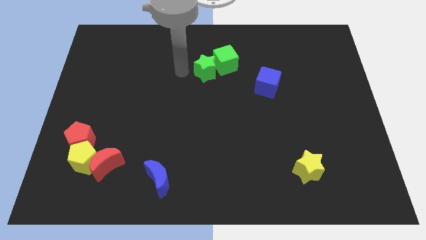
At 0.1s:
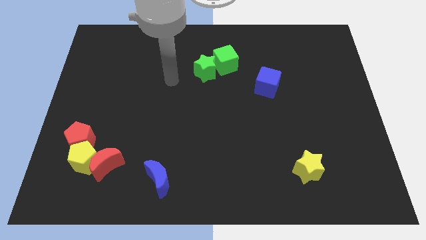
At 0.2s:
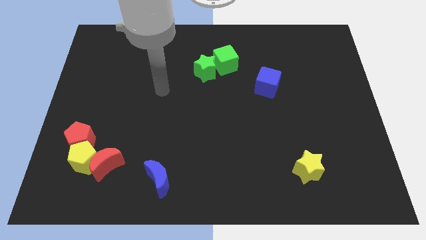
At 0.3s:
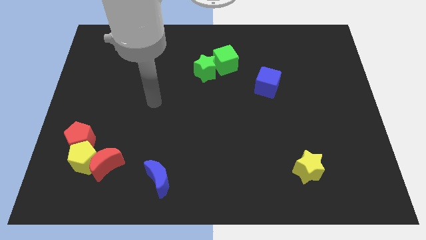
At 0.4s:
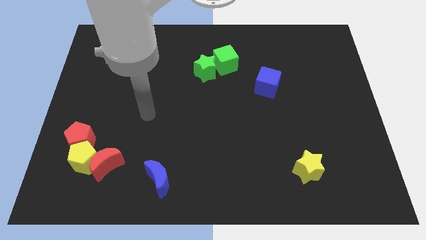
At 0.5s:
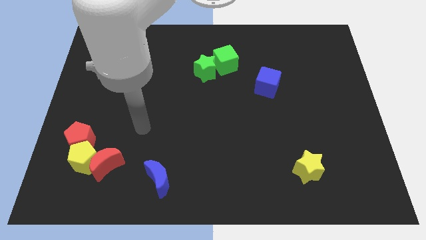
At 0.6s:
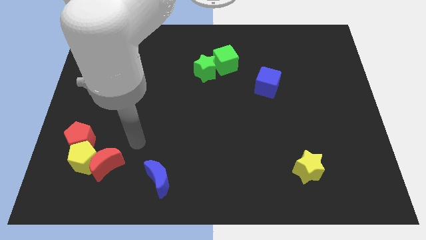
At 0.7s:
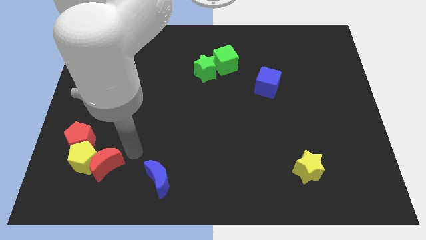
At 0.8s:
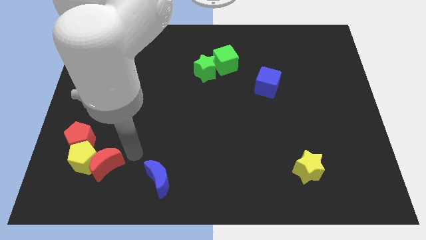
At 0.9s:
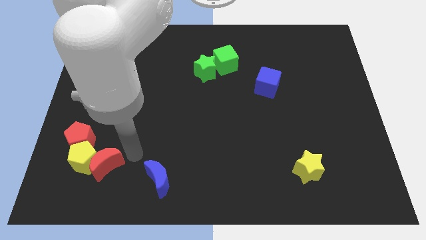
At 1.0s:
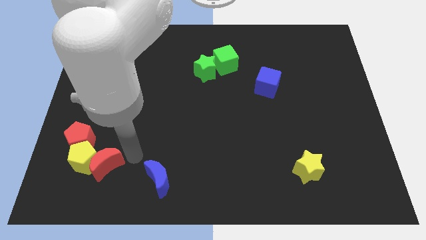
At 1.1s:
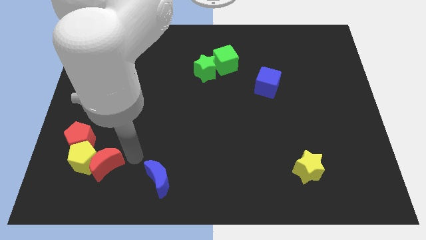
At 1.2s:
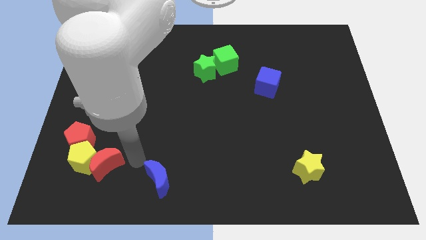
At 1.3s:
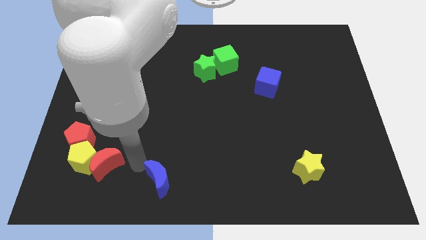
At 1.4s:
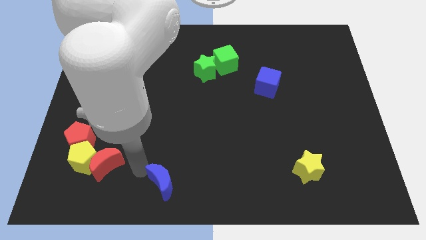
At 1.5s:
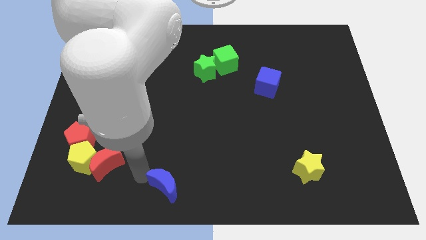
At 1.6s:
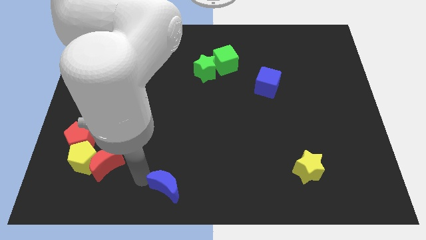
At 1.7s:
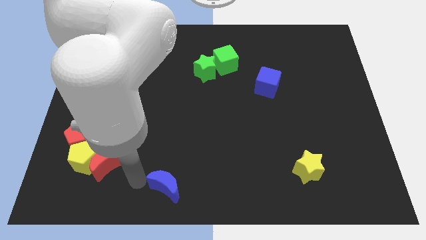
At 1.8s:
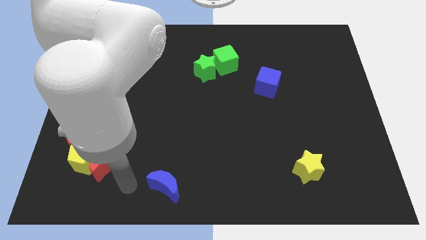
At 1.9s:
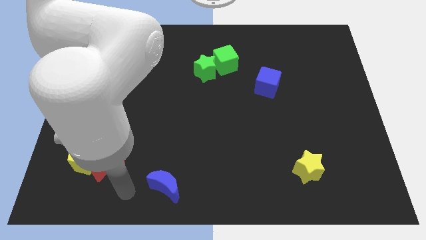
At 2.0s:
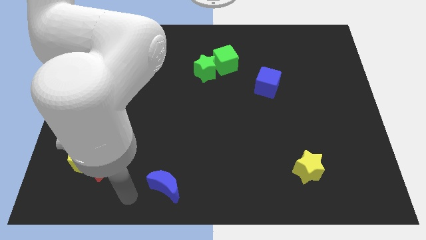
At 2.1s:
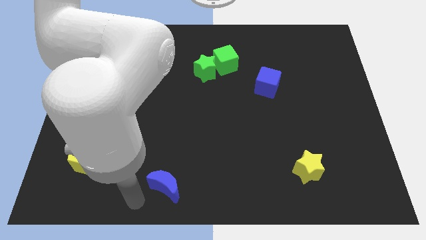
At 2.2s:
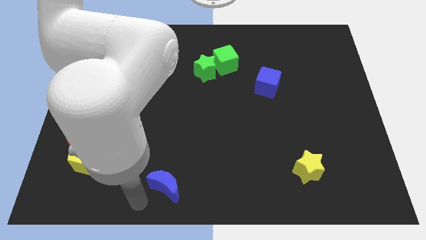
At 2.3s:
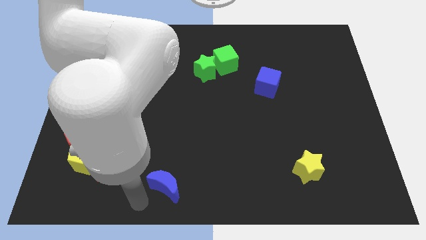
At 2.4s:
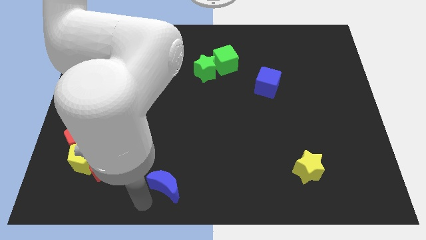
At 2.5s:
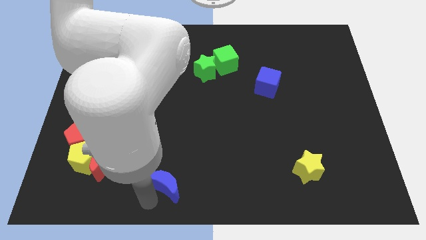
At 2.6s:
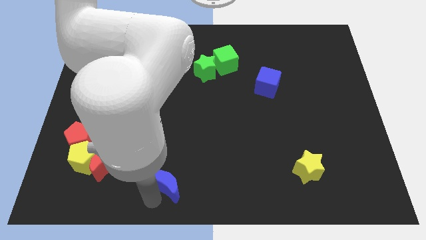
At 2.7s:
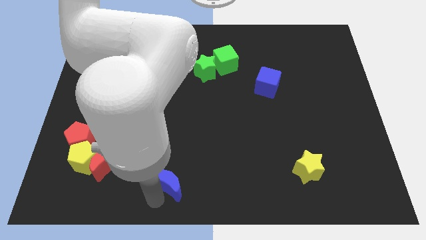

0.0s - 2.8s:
slightly move down the blue moon

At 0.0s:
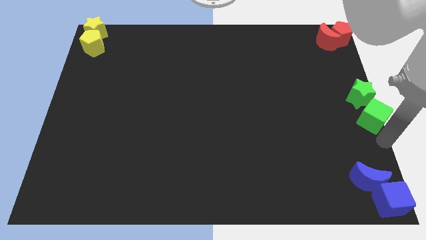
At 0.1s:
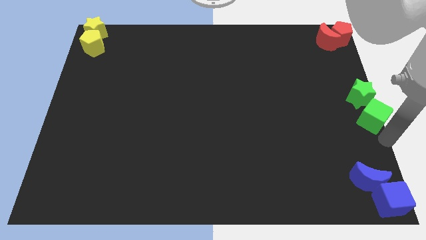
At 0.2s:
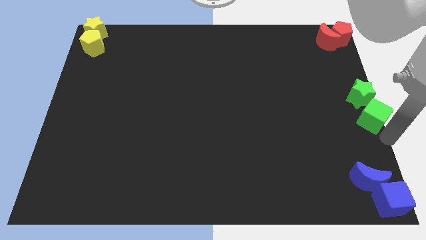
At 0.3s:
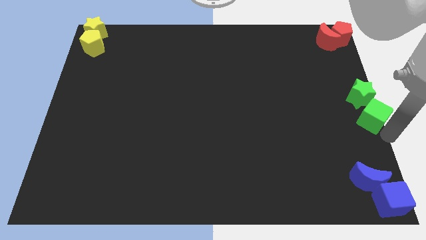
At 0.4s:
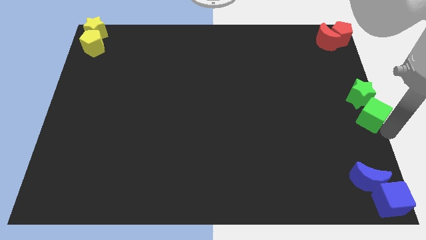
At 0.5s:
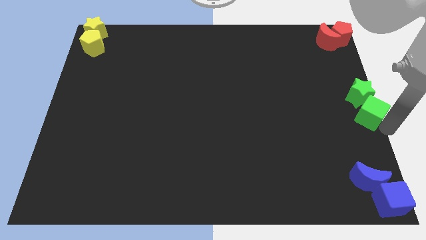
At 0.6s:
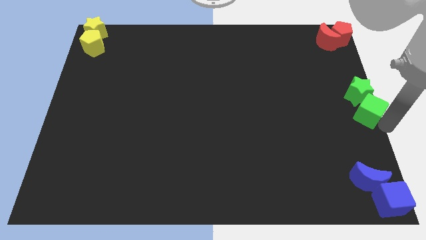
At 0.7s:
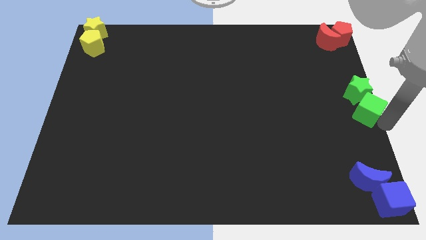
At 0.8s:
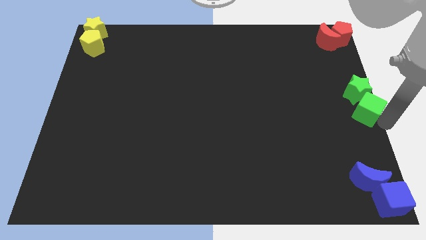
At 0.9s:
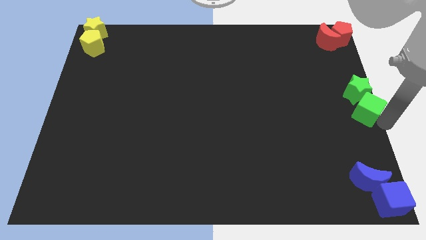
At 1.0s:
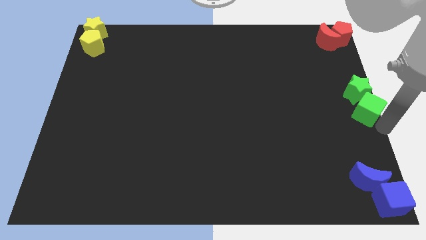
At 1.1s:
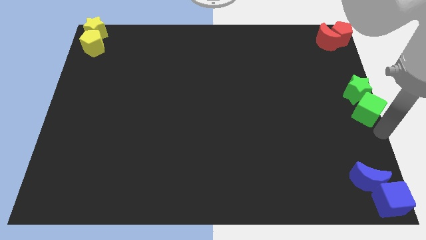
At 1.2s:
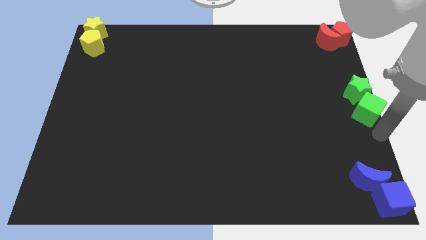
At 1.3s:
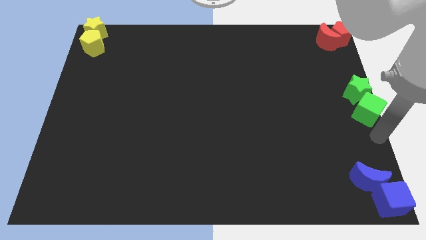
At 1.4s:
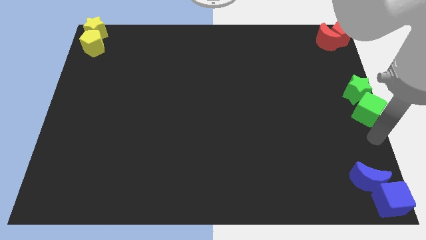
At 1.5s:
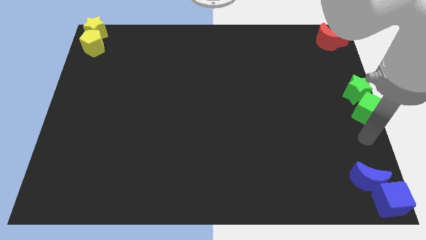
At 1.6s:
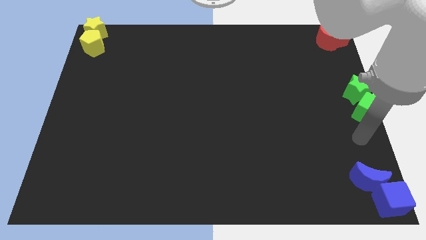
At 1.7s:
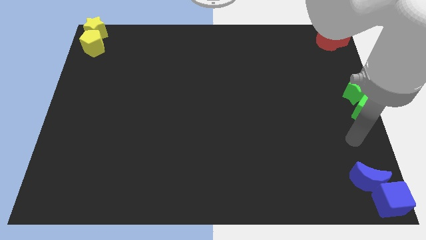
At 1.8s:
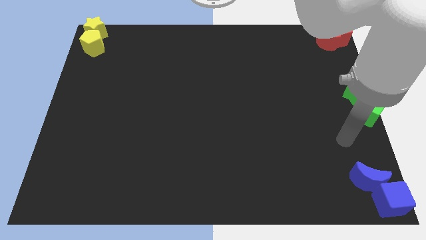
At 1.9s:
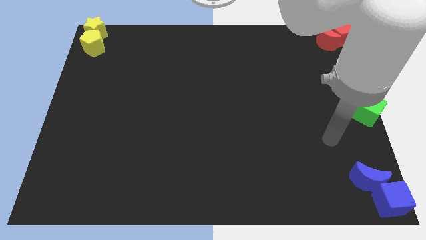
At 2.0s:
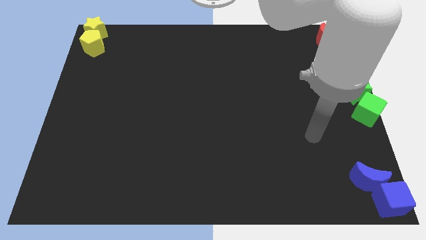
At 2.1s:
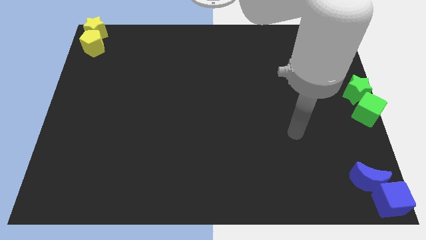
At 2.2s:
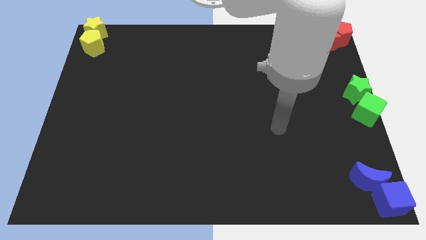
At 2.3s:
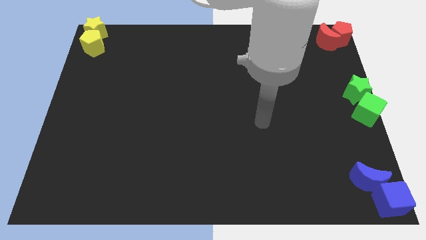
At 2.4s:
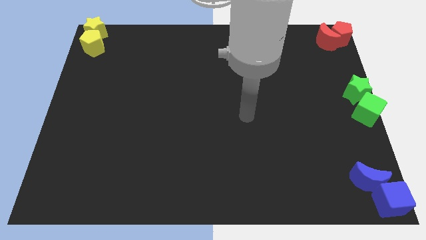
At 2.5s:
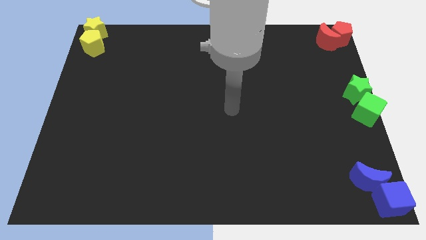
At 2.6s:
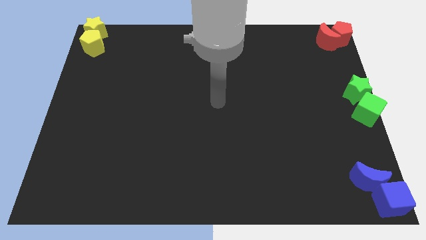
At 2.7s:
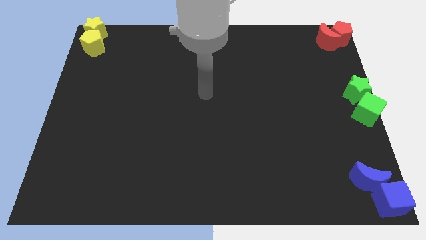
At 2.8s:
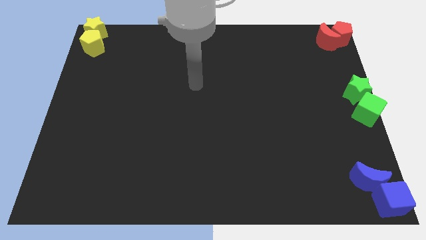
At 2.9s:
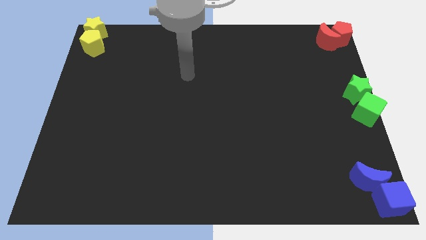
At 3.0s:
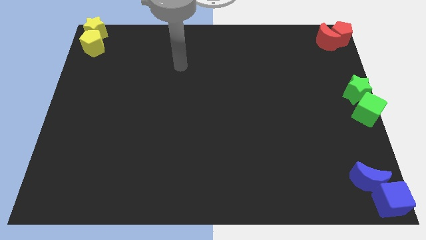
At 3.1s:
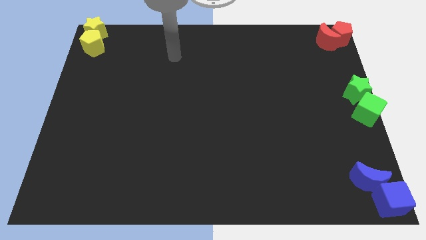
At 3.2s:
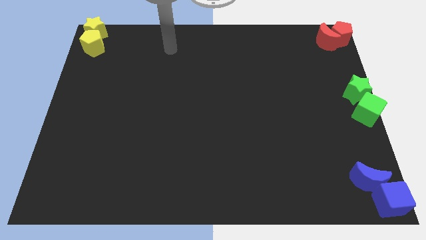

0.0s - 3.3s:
move the green cube into the green star

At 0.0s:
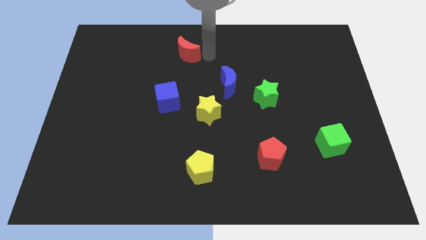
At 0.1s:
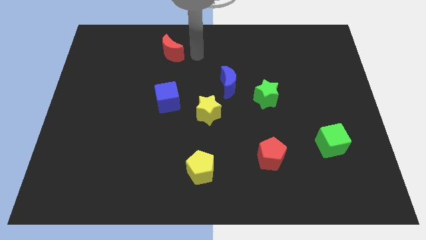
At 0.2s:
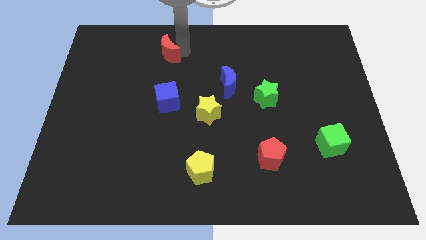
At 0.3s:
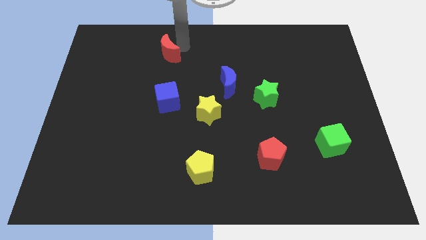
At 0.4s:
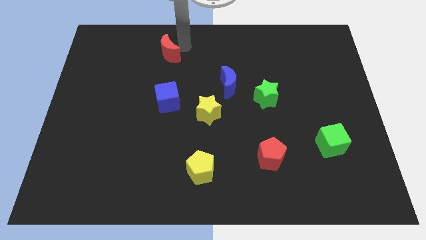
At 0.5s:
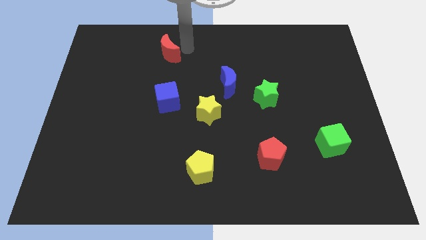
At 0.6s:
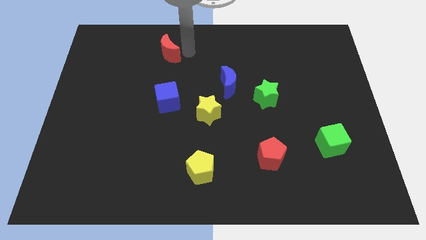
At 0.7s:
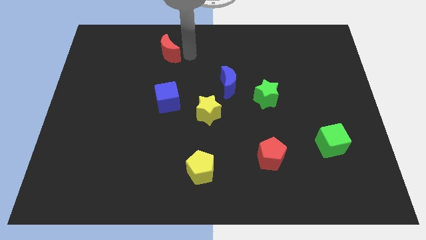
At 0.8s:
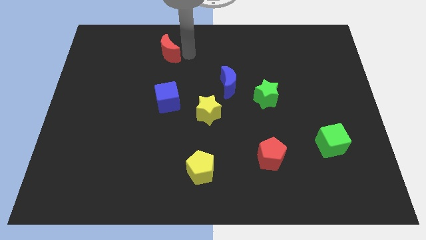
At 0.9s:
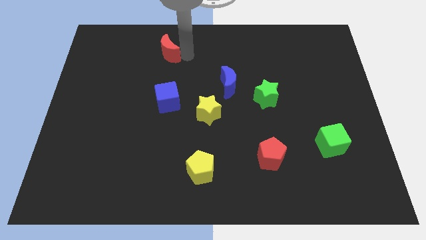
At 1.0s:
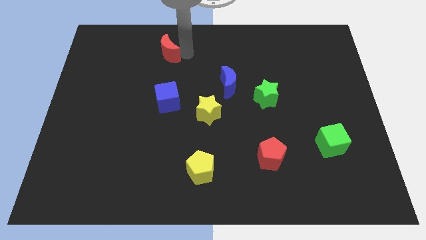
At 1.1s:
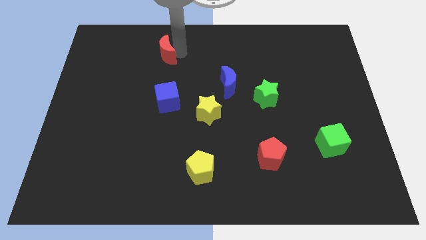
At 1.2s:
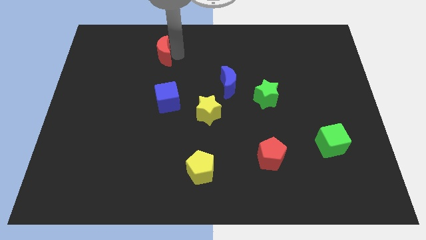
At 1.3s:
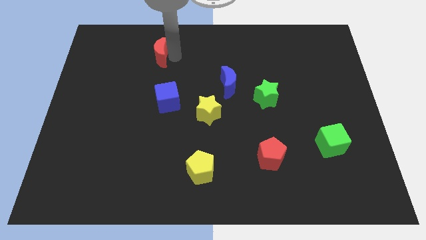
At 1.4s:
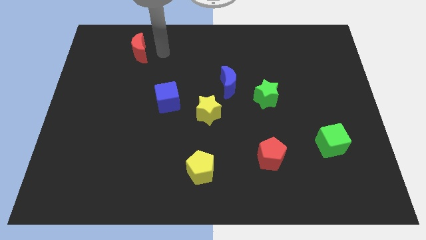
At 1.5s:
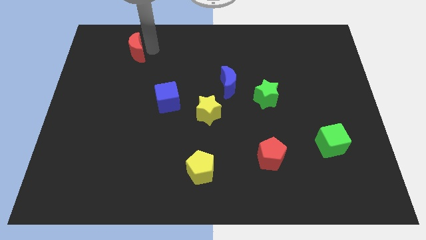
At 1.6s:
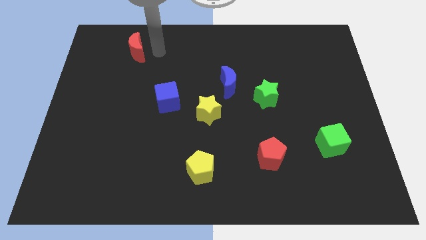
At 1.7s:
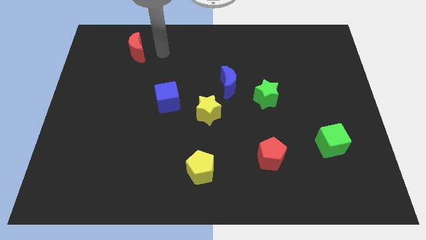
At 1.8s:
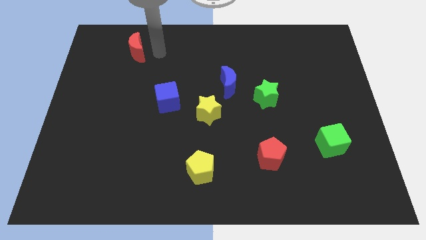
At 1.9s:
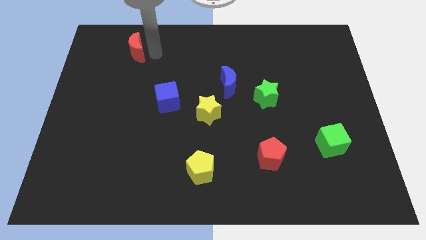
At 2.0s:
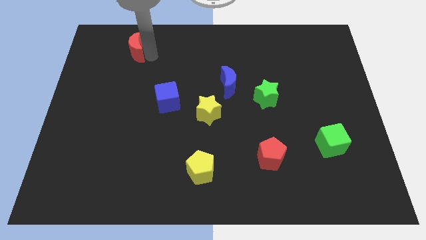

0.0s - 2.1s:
push the red moon to the left side of the board

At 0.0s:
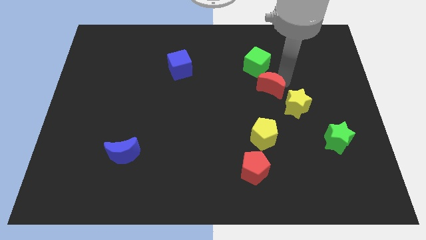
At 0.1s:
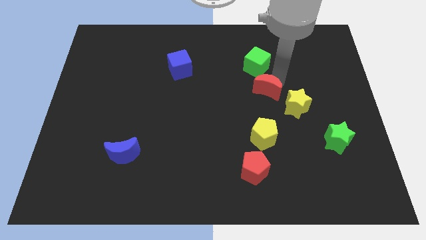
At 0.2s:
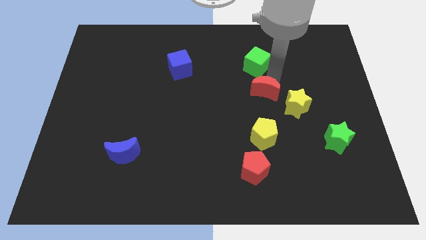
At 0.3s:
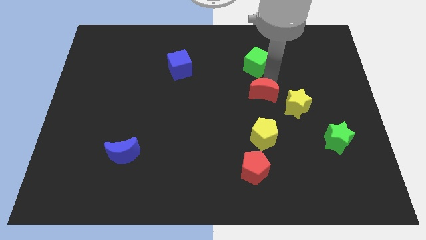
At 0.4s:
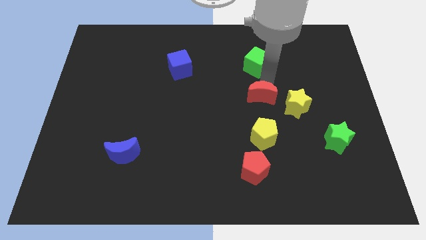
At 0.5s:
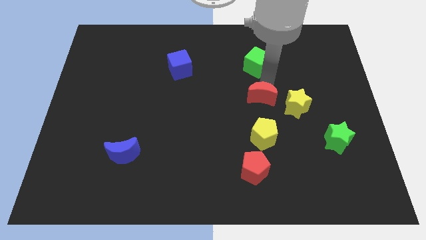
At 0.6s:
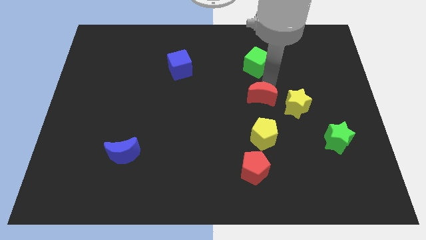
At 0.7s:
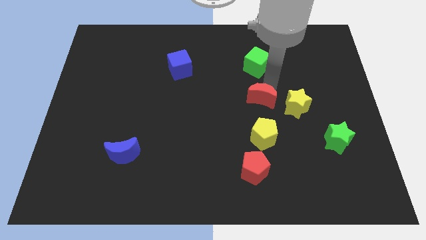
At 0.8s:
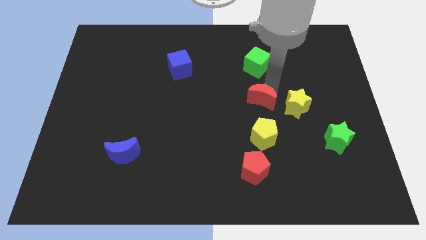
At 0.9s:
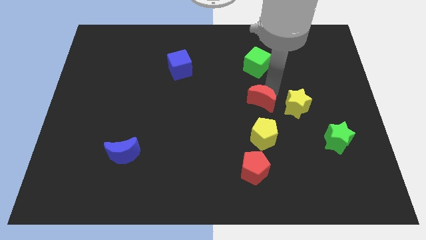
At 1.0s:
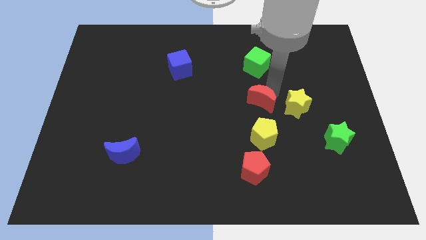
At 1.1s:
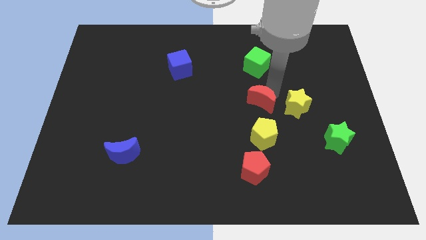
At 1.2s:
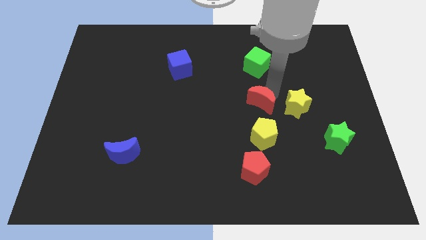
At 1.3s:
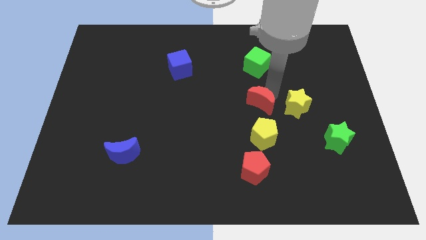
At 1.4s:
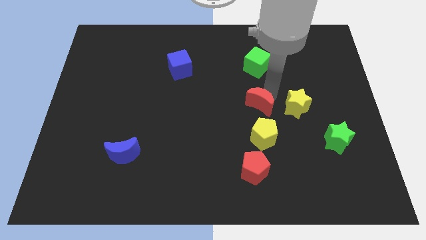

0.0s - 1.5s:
push red moon above yellow pentagon
